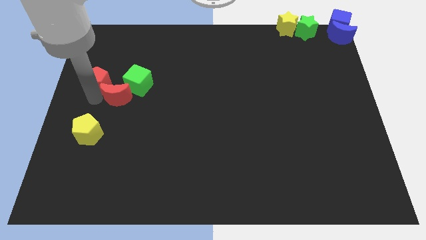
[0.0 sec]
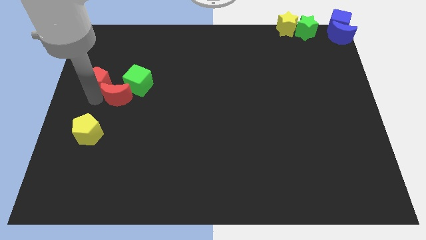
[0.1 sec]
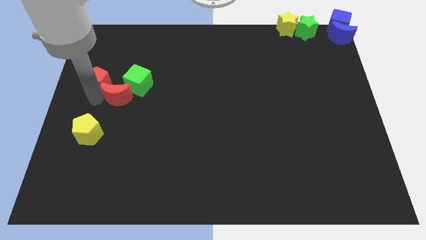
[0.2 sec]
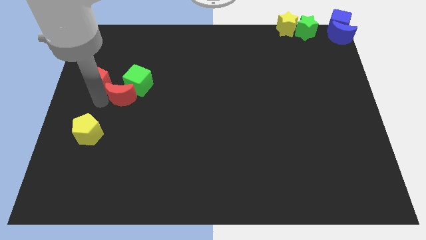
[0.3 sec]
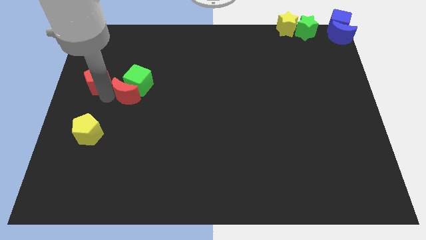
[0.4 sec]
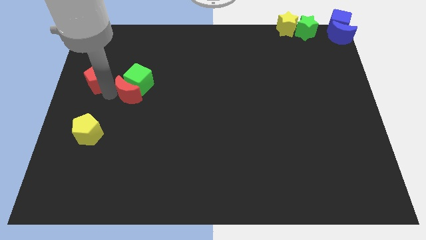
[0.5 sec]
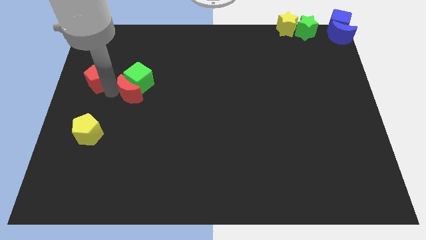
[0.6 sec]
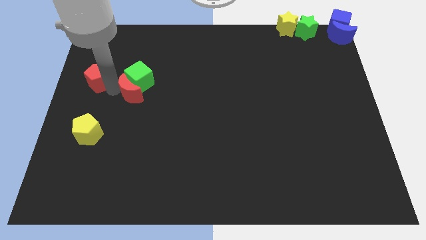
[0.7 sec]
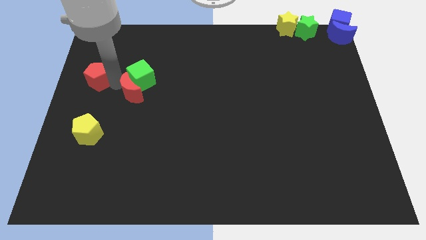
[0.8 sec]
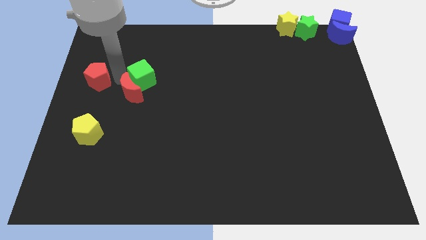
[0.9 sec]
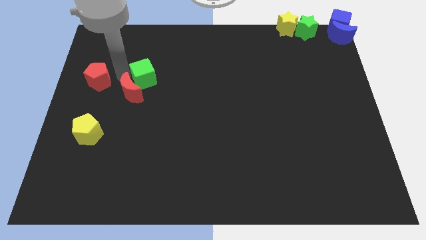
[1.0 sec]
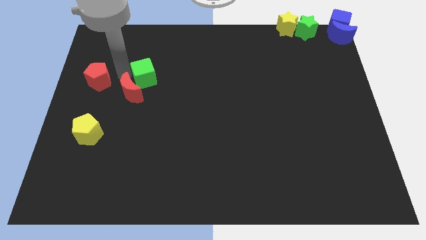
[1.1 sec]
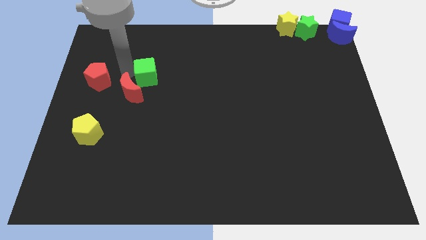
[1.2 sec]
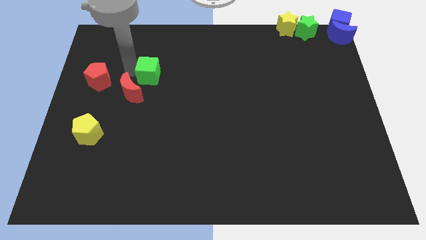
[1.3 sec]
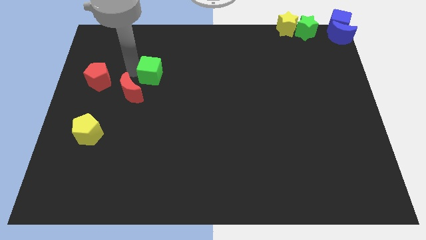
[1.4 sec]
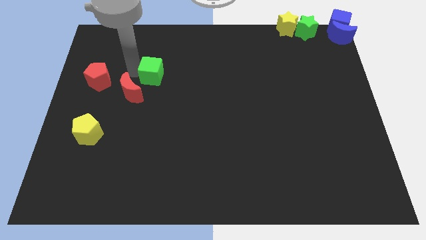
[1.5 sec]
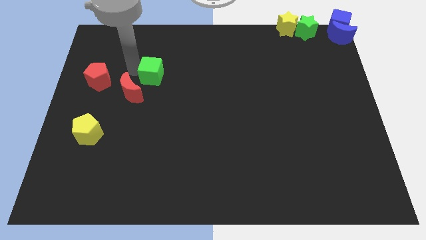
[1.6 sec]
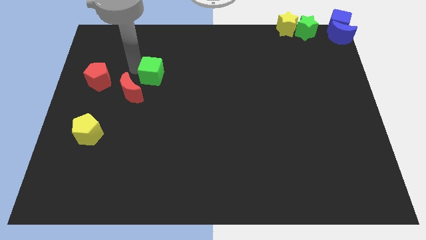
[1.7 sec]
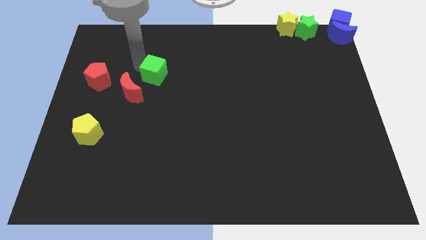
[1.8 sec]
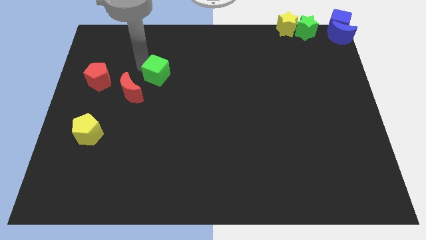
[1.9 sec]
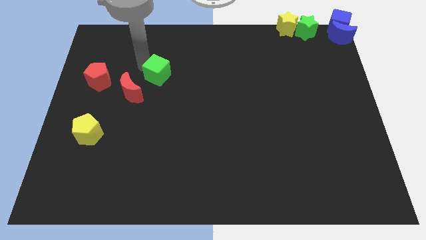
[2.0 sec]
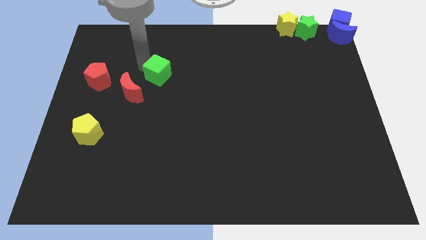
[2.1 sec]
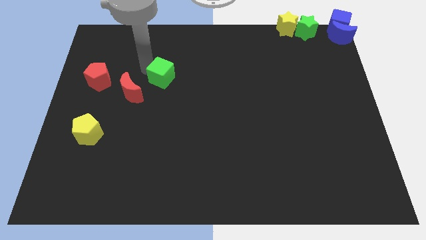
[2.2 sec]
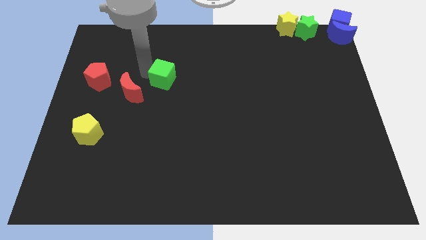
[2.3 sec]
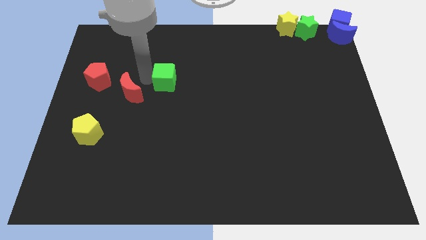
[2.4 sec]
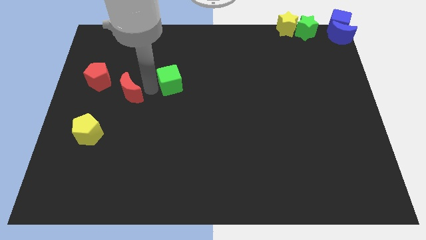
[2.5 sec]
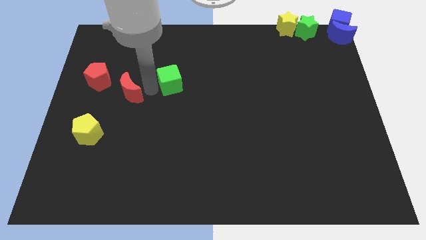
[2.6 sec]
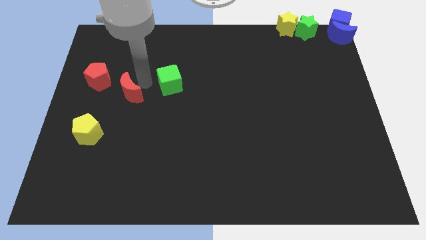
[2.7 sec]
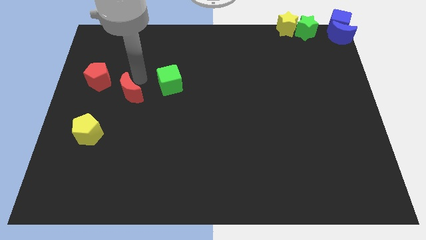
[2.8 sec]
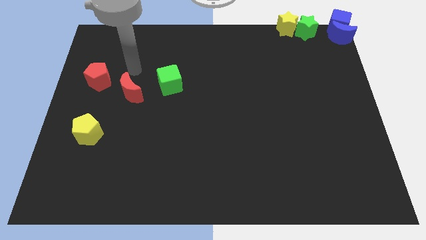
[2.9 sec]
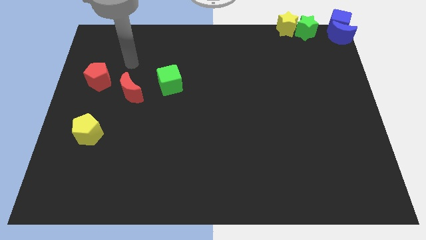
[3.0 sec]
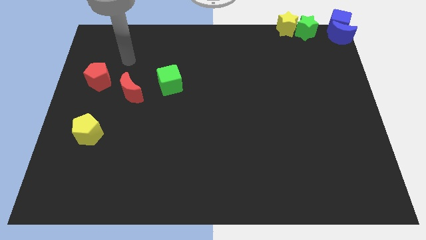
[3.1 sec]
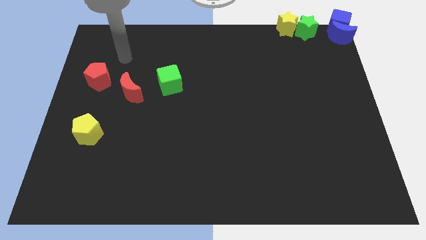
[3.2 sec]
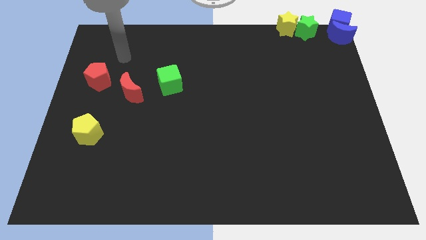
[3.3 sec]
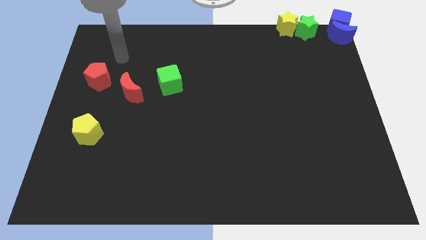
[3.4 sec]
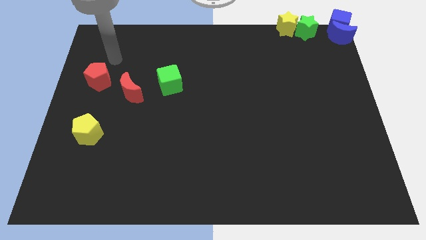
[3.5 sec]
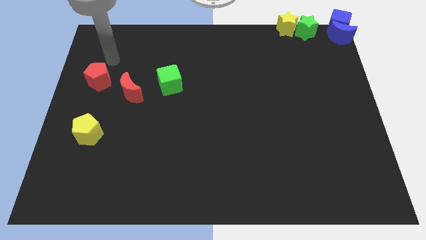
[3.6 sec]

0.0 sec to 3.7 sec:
place the green cube right to the red crescent

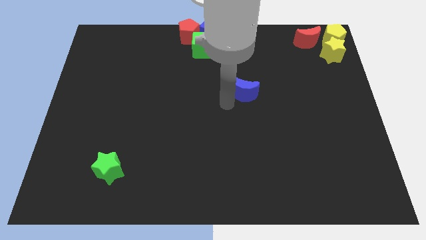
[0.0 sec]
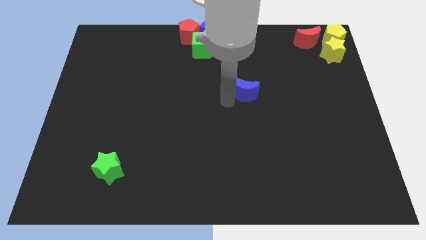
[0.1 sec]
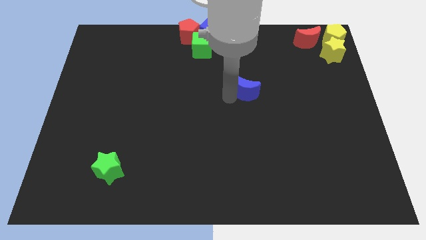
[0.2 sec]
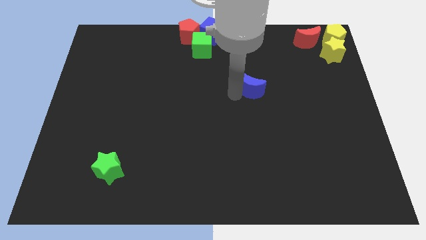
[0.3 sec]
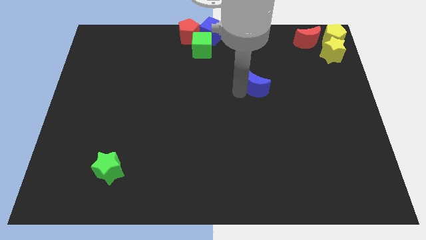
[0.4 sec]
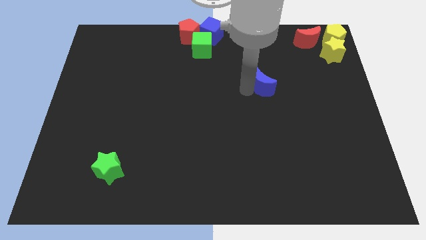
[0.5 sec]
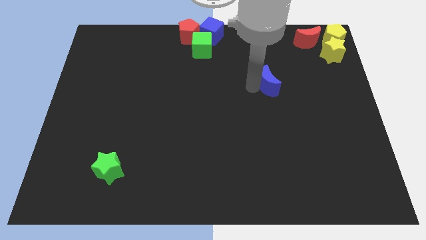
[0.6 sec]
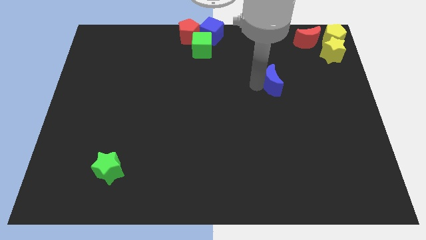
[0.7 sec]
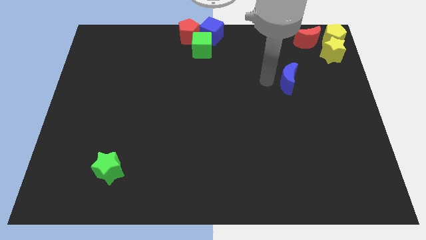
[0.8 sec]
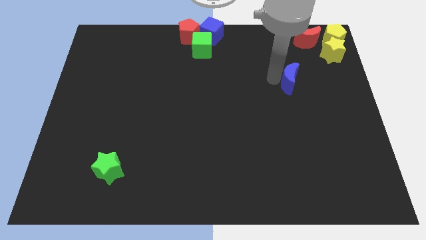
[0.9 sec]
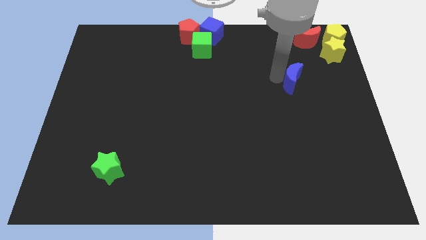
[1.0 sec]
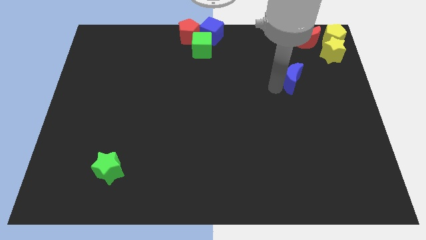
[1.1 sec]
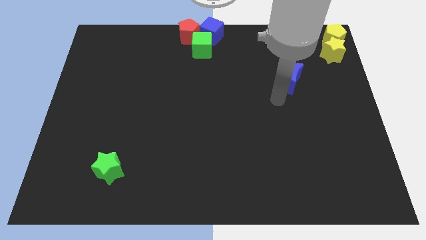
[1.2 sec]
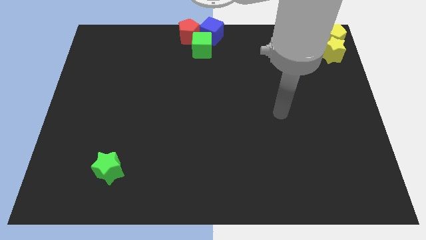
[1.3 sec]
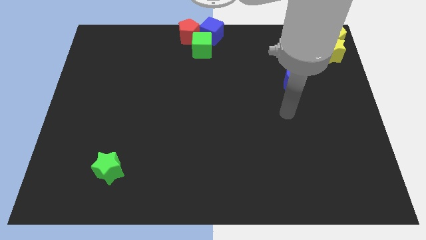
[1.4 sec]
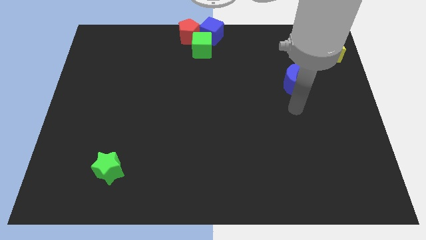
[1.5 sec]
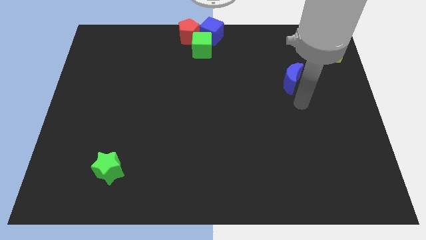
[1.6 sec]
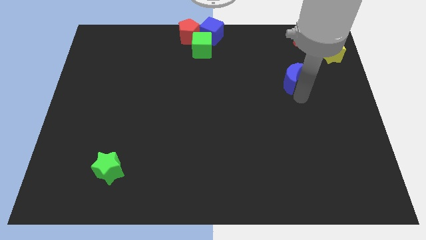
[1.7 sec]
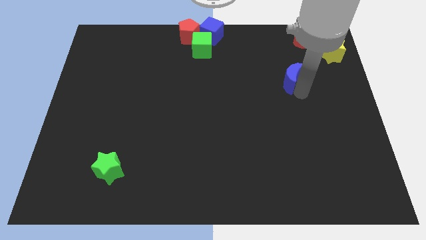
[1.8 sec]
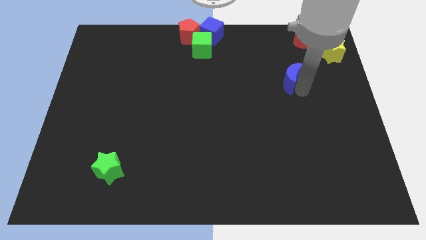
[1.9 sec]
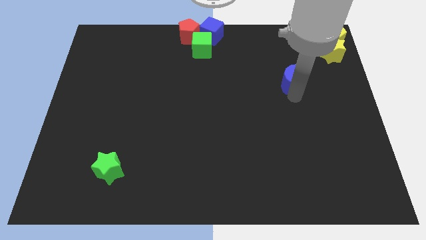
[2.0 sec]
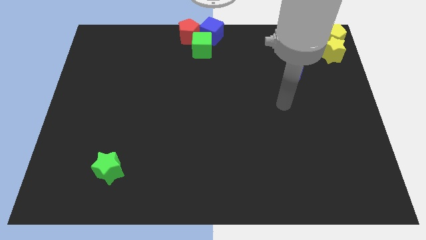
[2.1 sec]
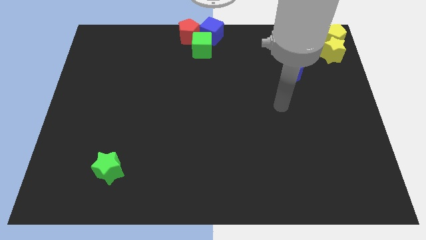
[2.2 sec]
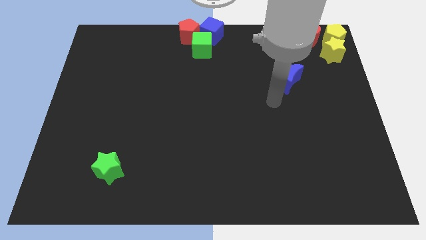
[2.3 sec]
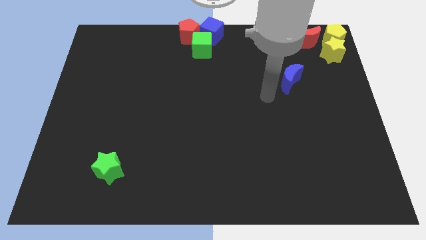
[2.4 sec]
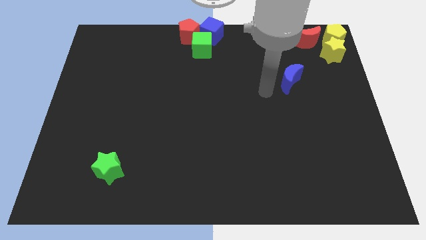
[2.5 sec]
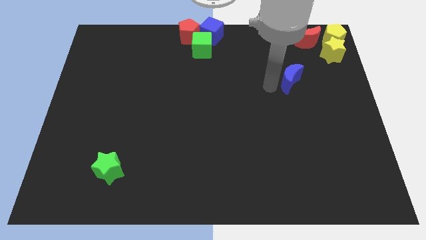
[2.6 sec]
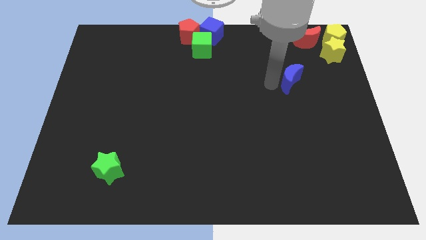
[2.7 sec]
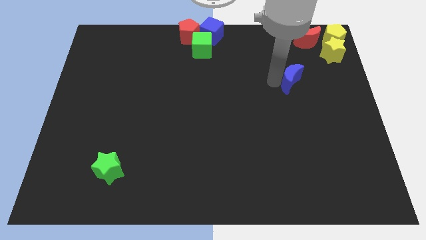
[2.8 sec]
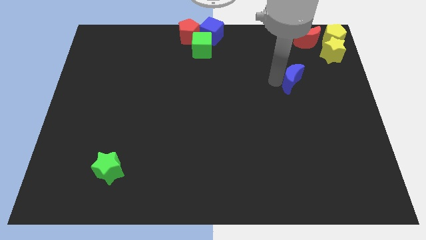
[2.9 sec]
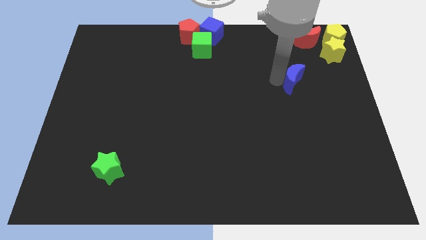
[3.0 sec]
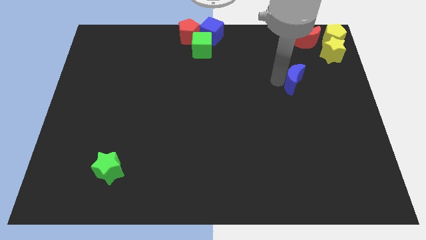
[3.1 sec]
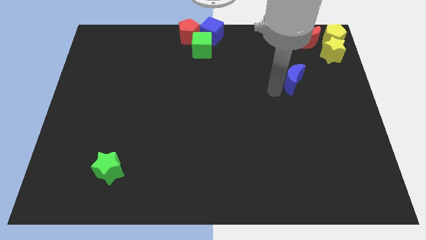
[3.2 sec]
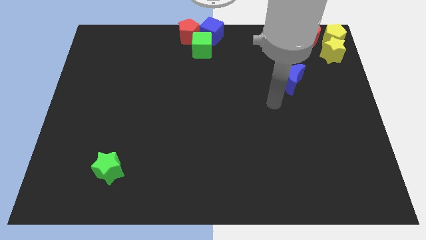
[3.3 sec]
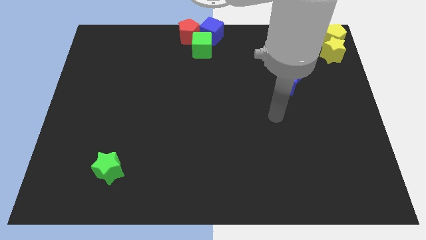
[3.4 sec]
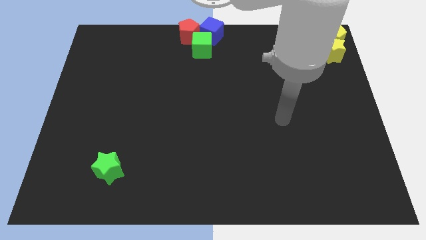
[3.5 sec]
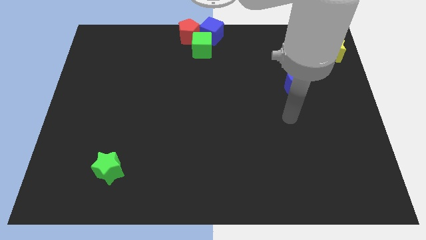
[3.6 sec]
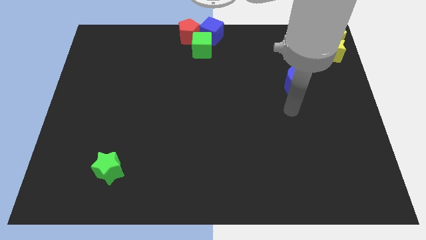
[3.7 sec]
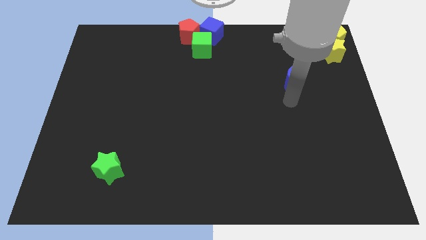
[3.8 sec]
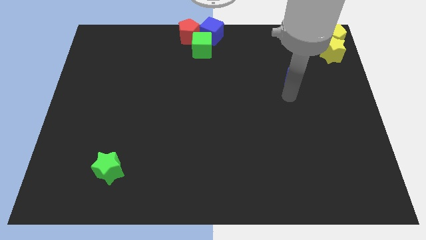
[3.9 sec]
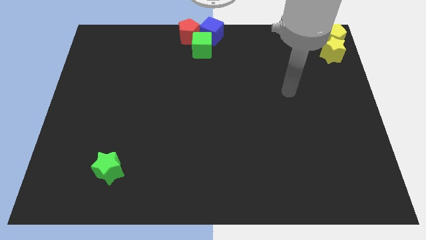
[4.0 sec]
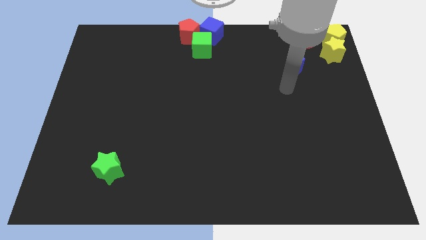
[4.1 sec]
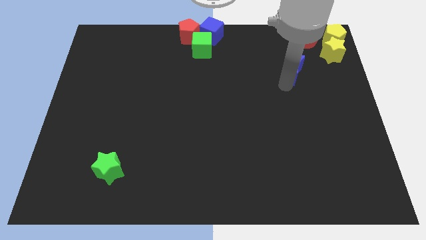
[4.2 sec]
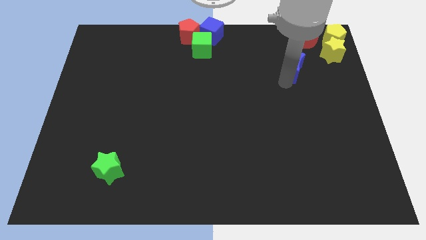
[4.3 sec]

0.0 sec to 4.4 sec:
move the blue moon to the bottom of the red moon

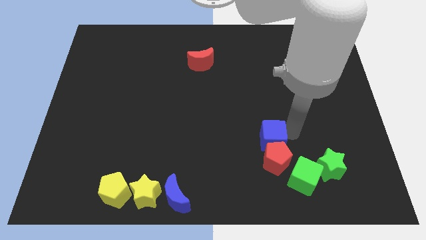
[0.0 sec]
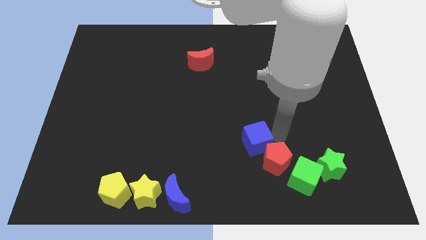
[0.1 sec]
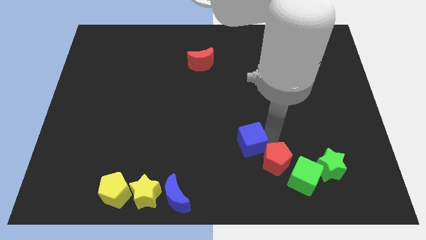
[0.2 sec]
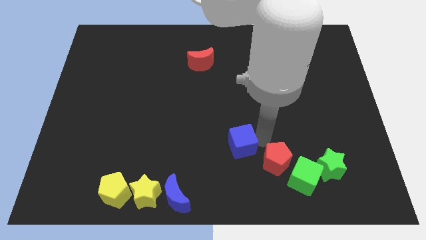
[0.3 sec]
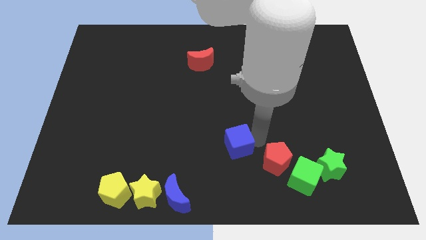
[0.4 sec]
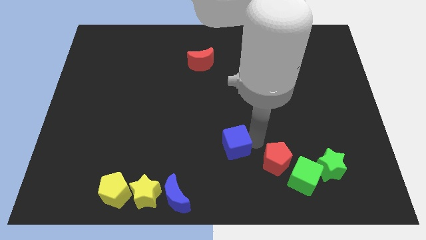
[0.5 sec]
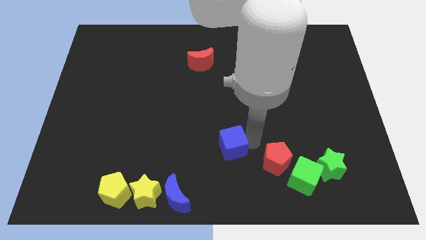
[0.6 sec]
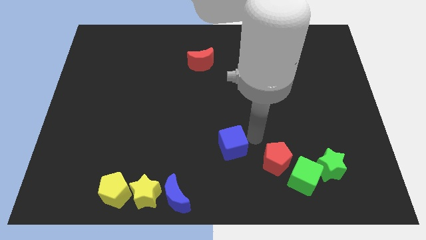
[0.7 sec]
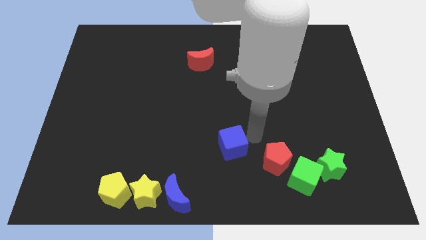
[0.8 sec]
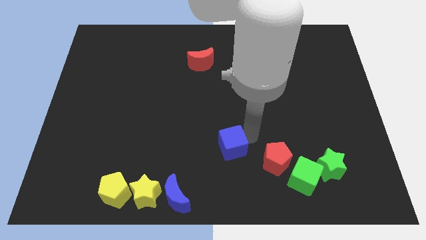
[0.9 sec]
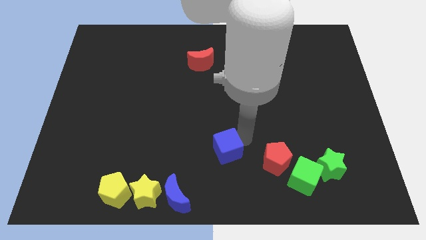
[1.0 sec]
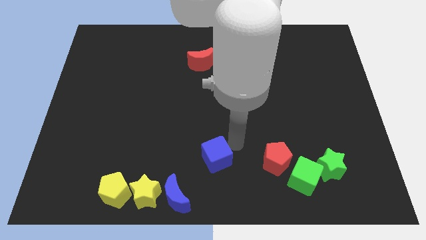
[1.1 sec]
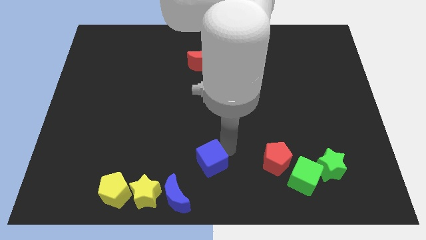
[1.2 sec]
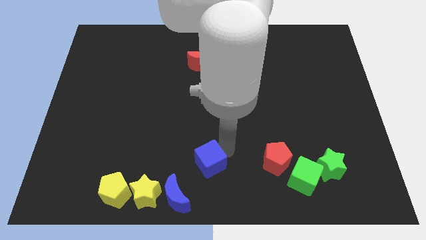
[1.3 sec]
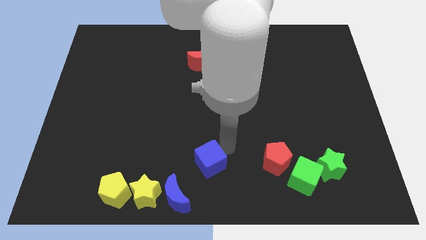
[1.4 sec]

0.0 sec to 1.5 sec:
separate blue cube from the red pentagon
